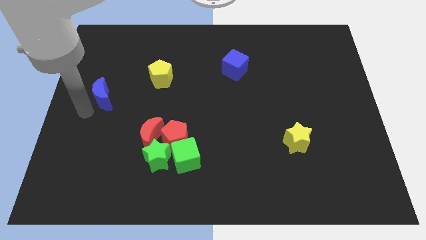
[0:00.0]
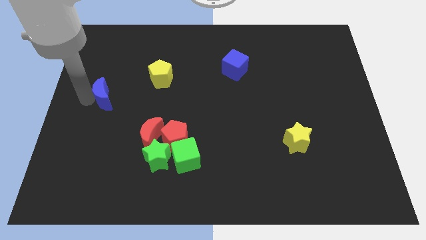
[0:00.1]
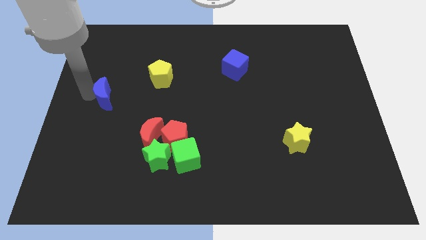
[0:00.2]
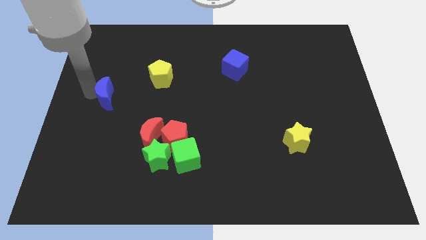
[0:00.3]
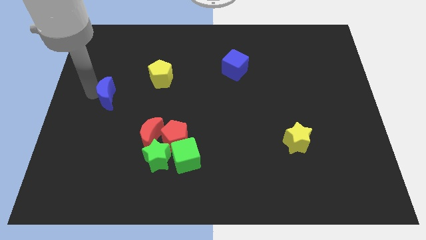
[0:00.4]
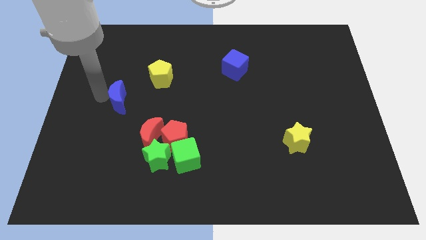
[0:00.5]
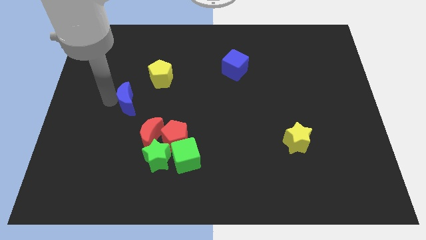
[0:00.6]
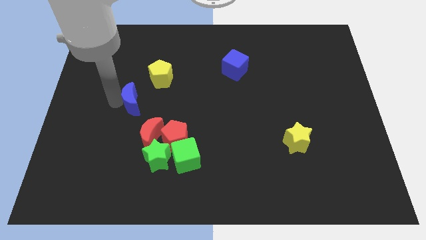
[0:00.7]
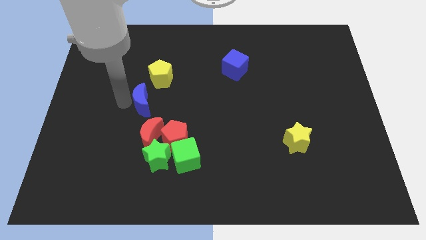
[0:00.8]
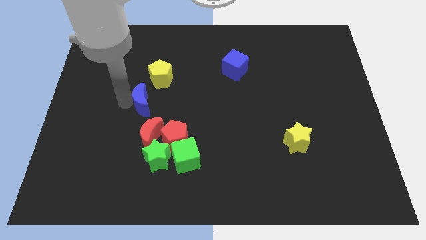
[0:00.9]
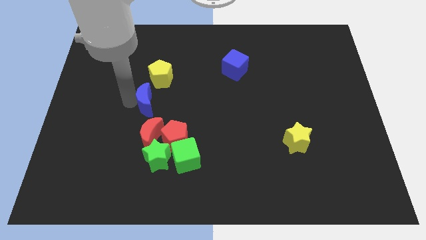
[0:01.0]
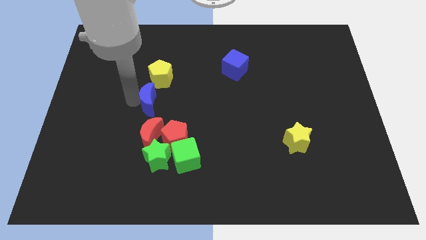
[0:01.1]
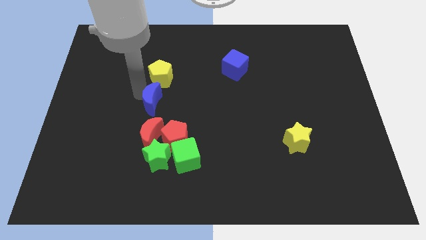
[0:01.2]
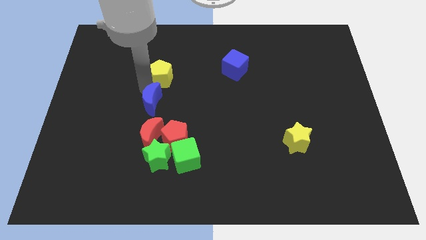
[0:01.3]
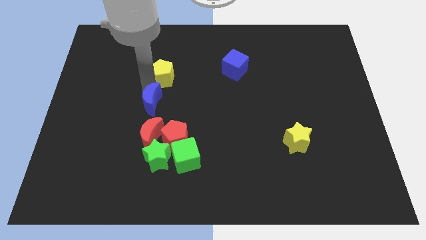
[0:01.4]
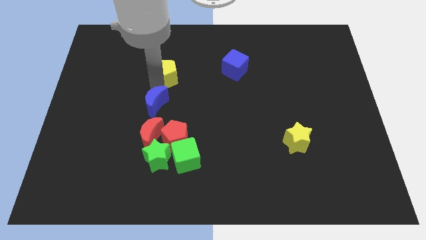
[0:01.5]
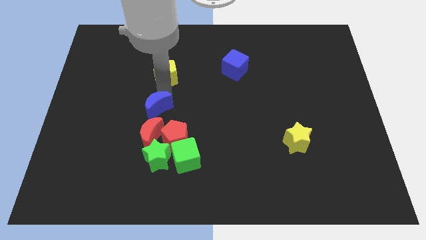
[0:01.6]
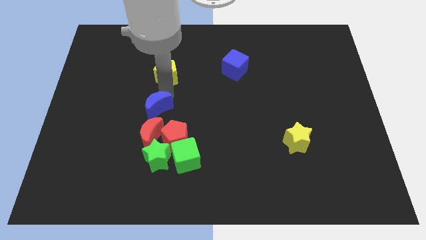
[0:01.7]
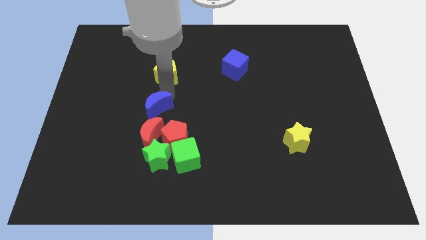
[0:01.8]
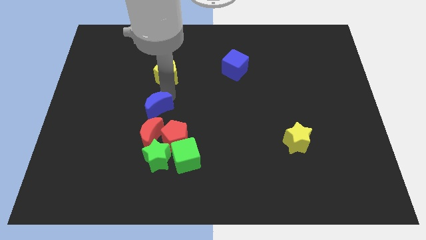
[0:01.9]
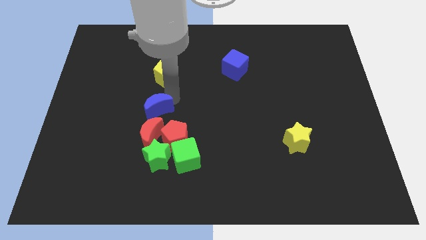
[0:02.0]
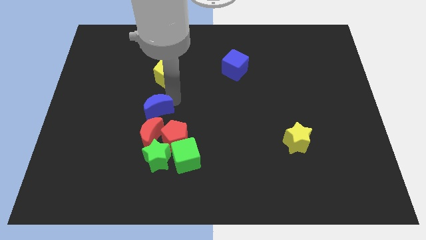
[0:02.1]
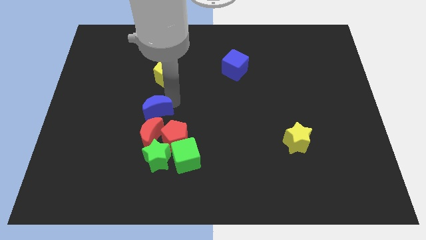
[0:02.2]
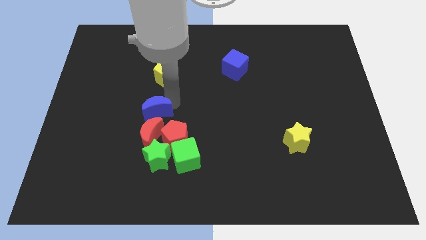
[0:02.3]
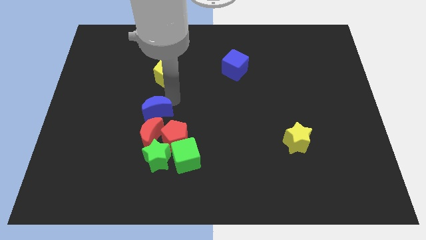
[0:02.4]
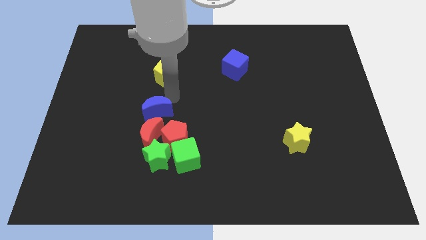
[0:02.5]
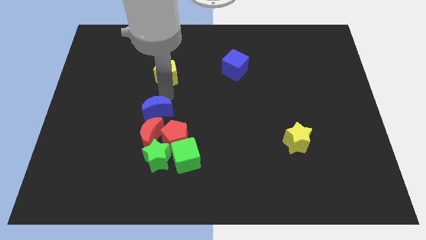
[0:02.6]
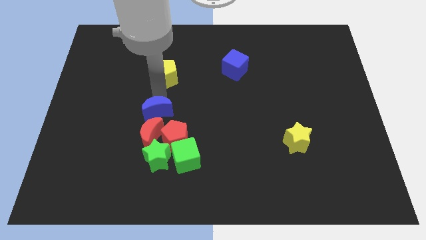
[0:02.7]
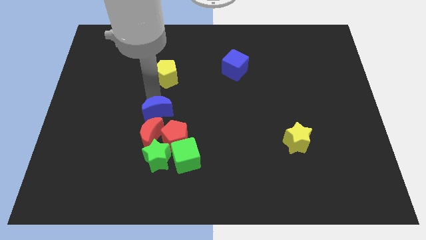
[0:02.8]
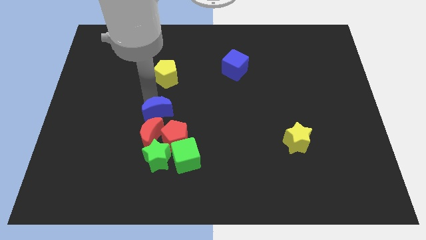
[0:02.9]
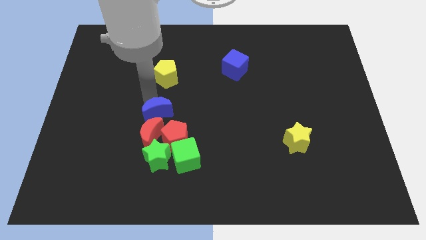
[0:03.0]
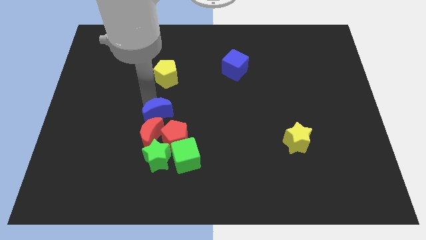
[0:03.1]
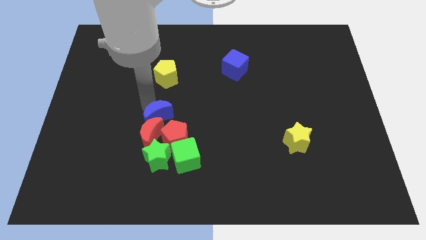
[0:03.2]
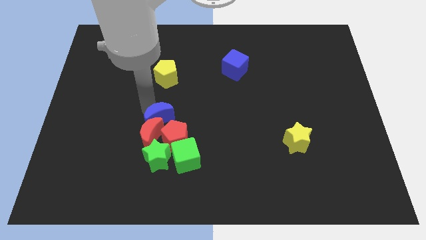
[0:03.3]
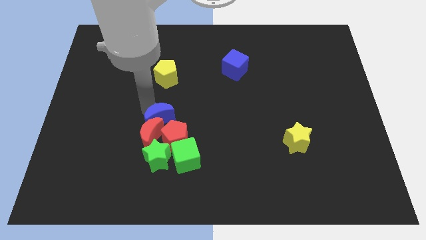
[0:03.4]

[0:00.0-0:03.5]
place the blue crescent close to red crescent

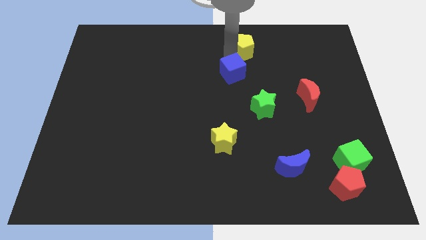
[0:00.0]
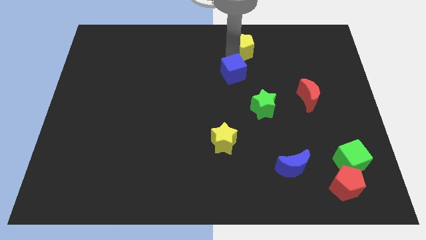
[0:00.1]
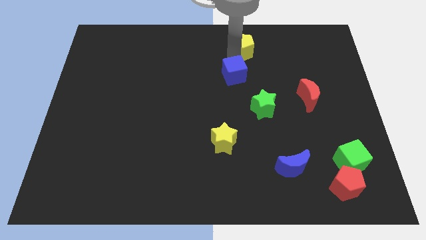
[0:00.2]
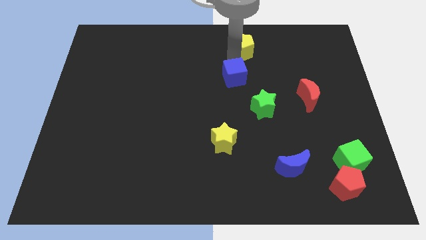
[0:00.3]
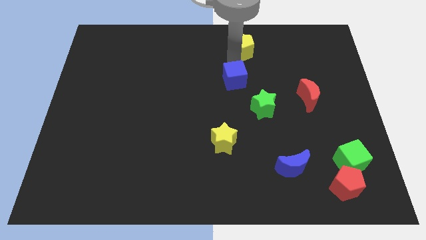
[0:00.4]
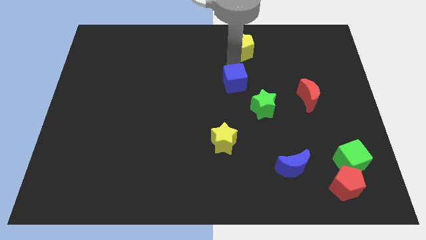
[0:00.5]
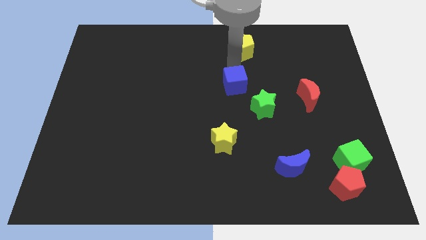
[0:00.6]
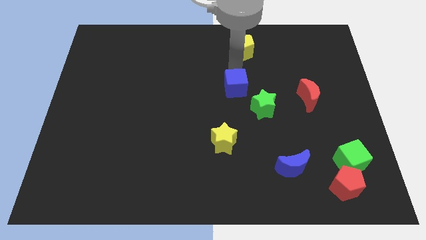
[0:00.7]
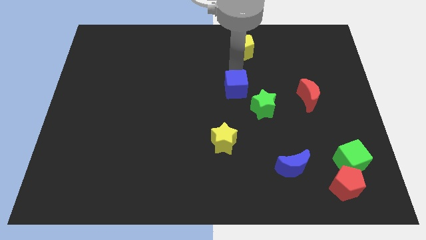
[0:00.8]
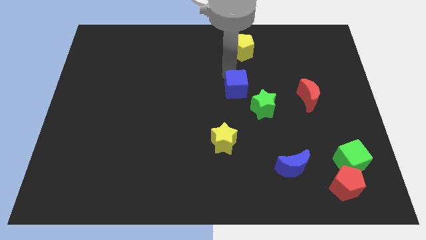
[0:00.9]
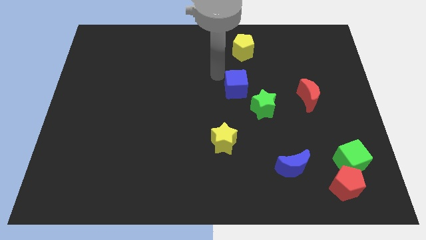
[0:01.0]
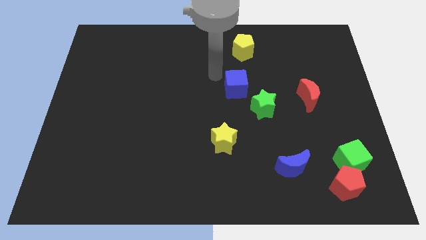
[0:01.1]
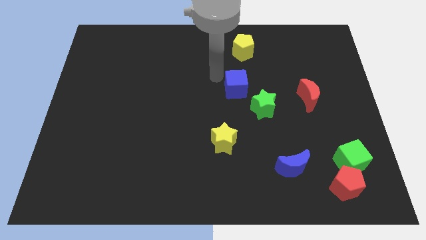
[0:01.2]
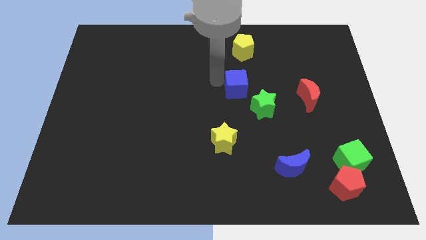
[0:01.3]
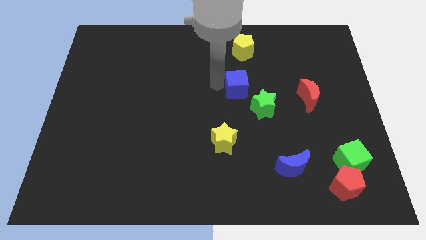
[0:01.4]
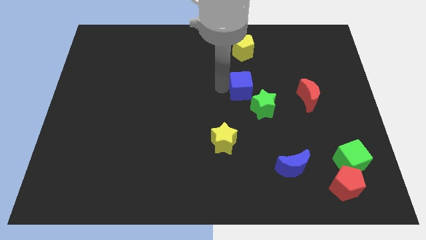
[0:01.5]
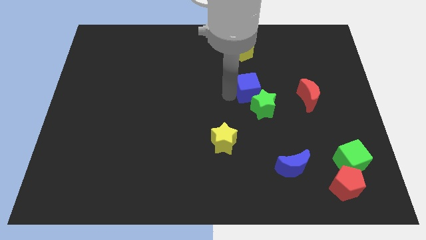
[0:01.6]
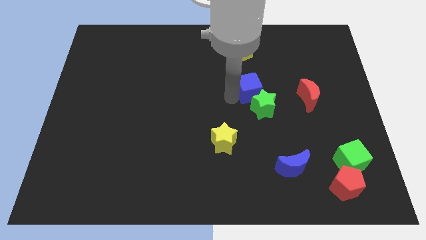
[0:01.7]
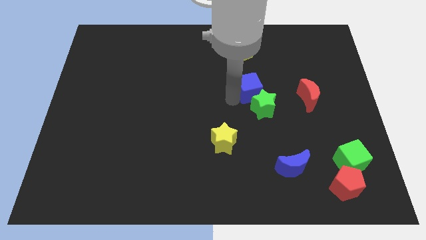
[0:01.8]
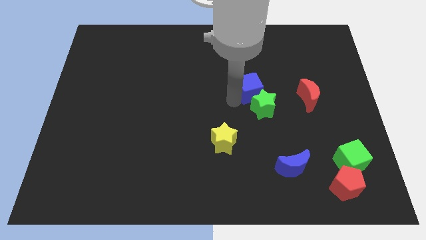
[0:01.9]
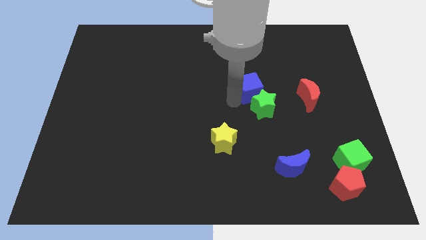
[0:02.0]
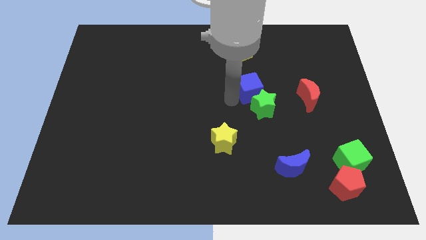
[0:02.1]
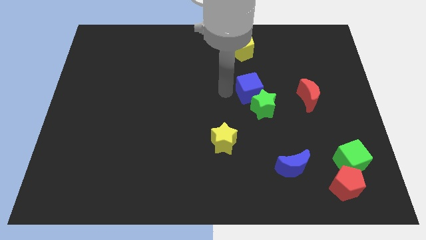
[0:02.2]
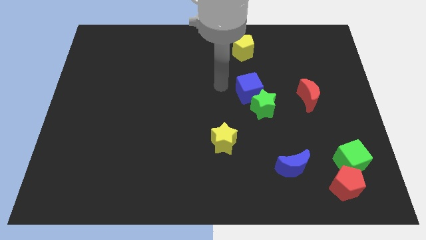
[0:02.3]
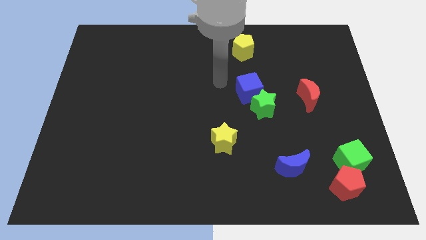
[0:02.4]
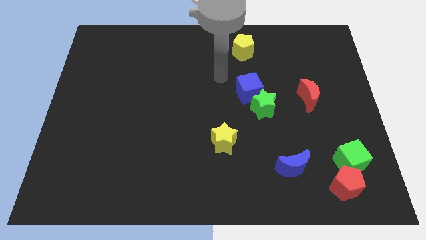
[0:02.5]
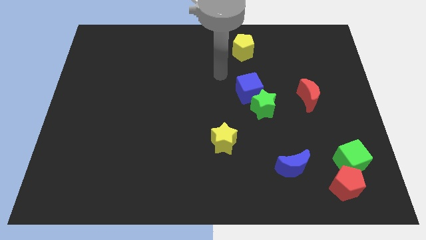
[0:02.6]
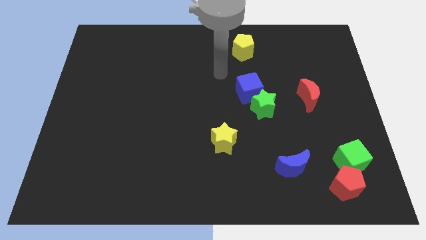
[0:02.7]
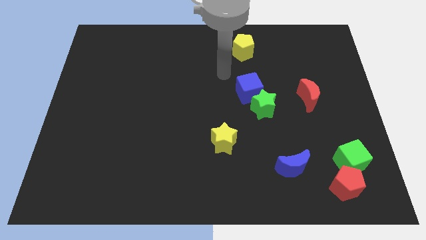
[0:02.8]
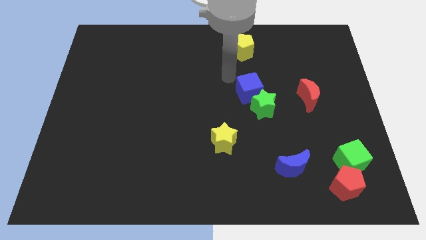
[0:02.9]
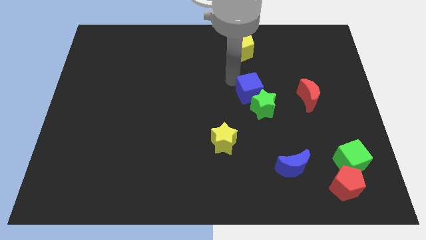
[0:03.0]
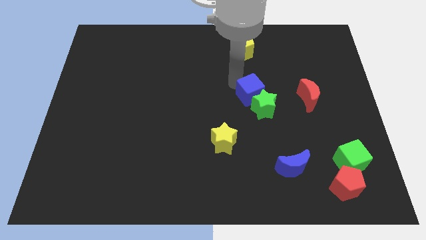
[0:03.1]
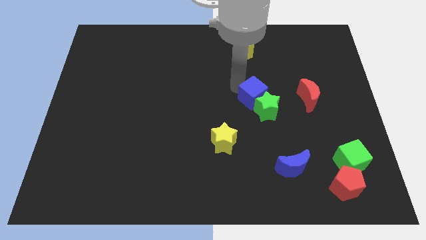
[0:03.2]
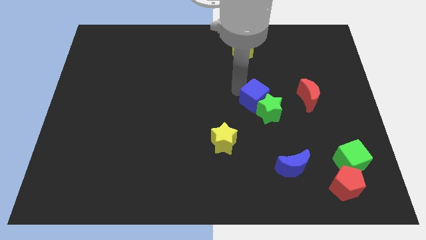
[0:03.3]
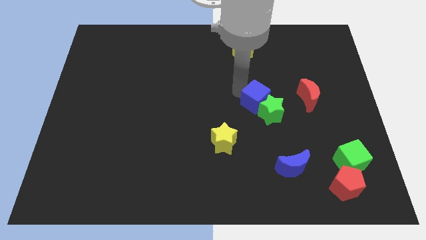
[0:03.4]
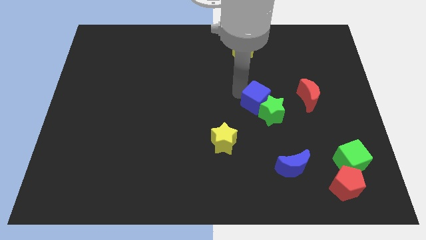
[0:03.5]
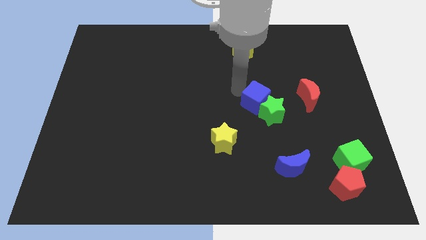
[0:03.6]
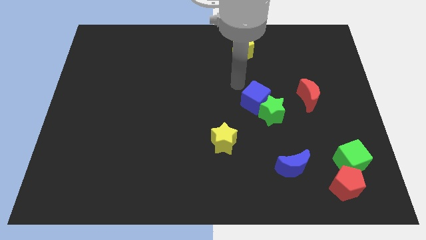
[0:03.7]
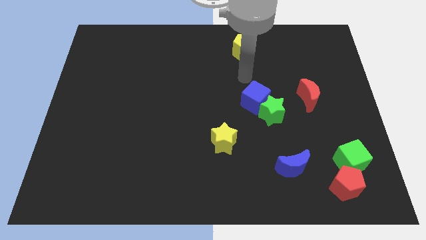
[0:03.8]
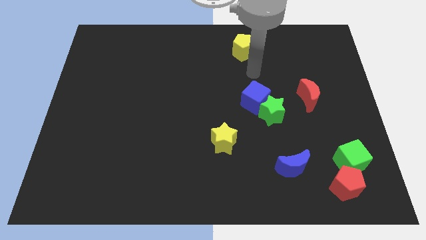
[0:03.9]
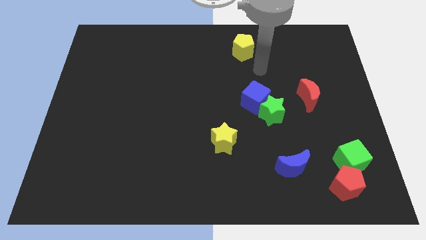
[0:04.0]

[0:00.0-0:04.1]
push blue into the green star

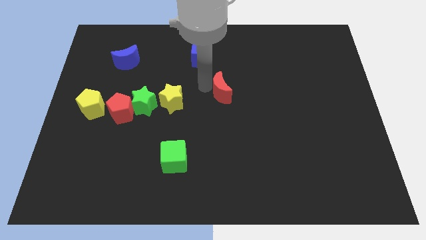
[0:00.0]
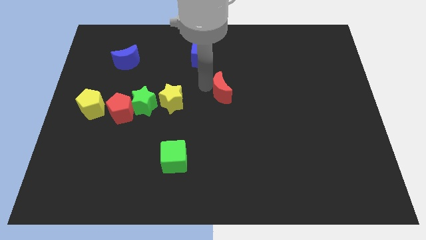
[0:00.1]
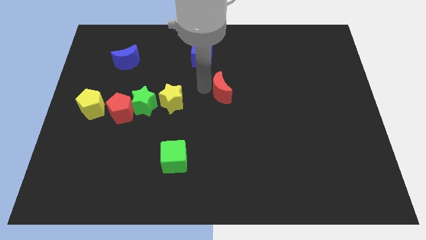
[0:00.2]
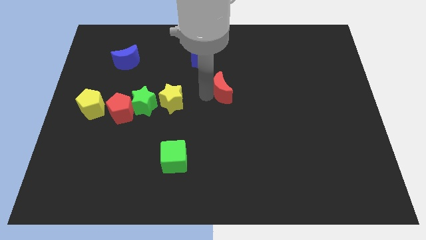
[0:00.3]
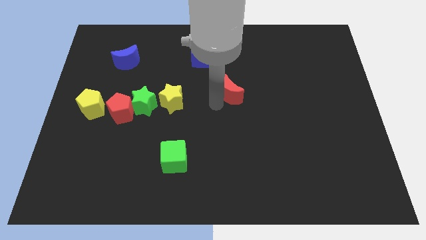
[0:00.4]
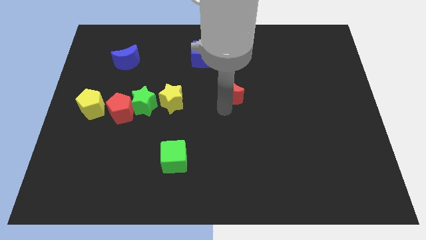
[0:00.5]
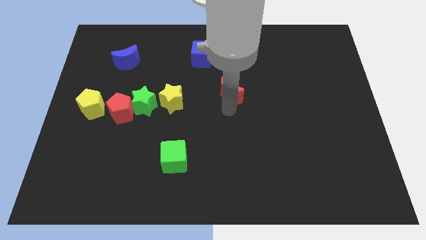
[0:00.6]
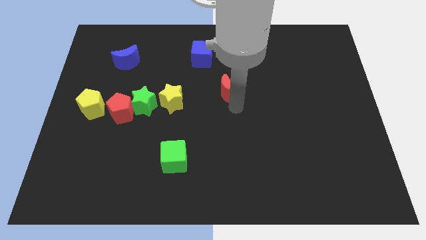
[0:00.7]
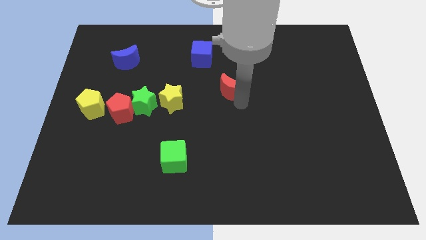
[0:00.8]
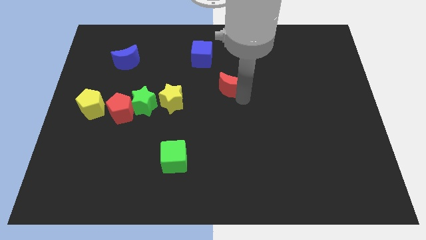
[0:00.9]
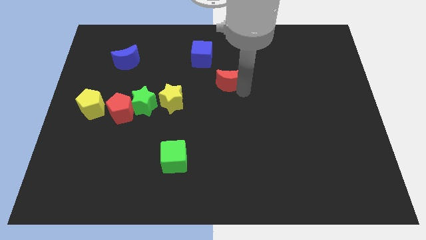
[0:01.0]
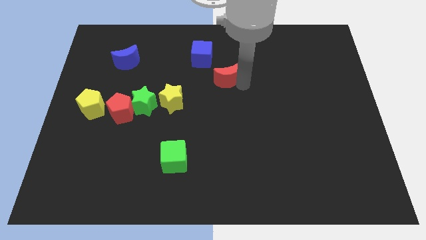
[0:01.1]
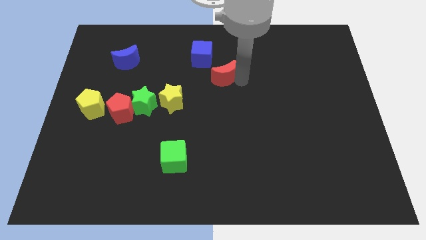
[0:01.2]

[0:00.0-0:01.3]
slide red crescent upwards

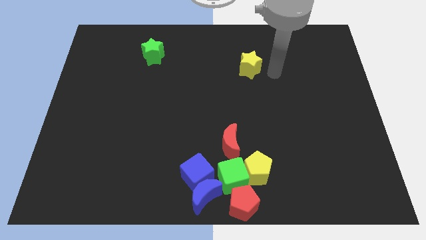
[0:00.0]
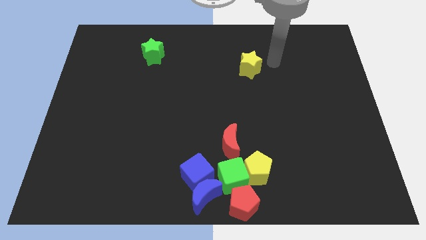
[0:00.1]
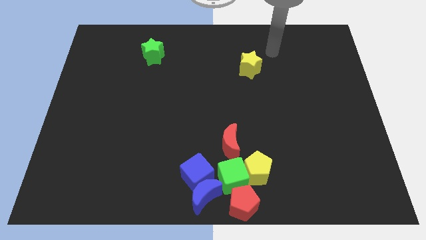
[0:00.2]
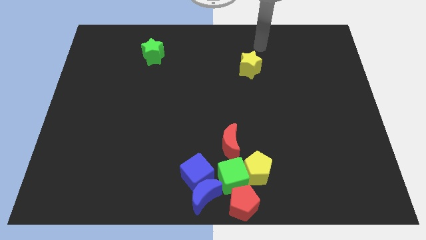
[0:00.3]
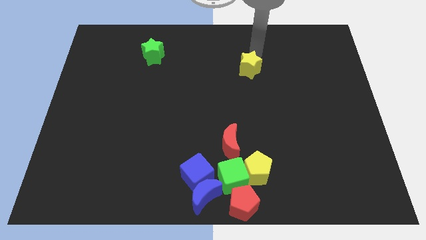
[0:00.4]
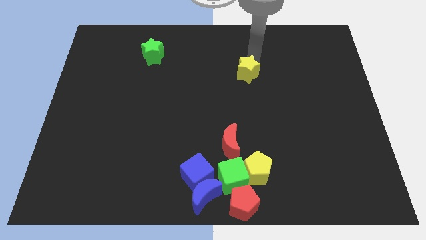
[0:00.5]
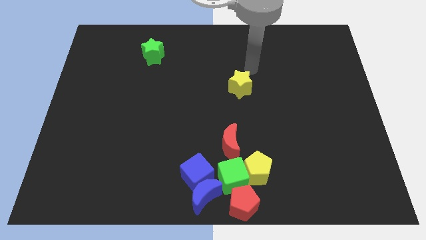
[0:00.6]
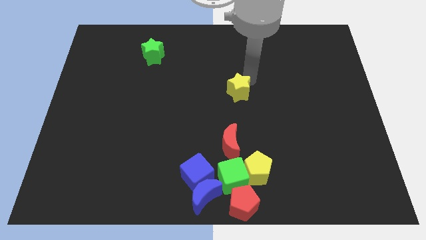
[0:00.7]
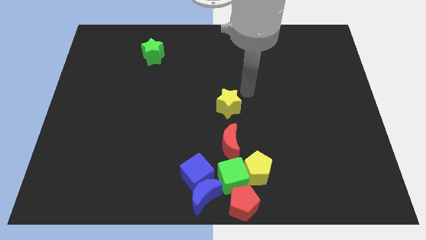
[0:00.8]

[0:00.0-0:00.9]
push the yellow star above the red crescent
